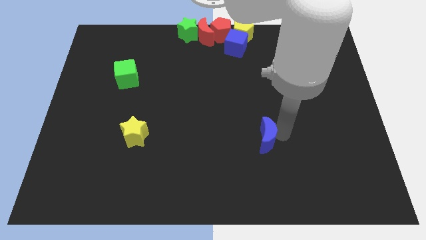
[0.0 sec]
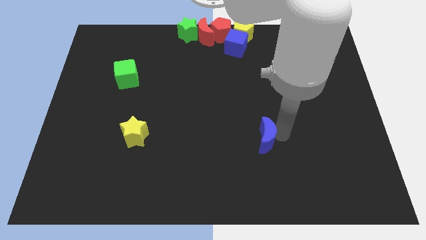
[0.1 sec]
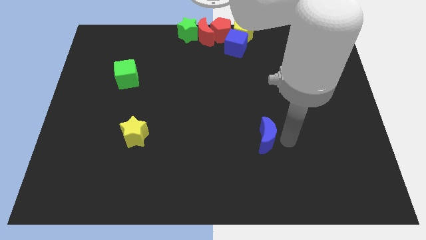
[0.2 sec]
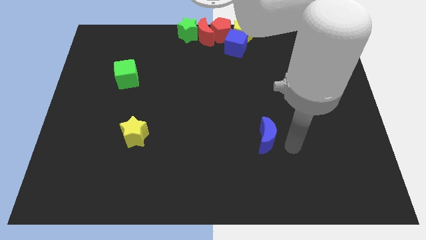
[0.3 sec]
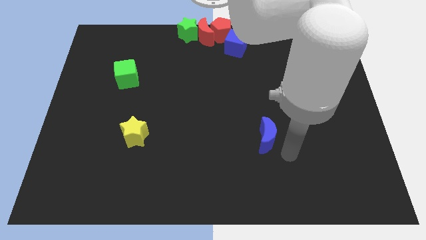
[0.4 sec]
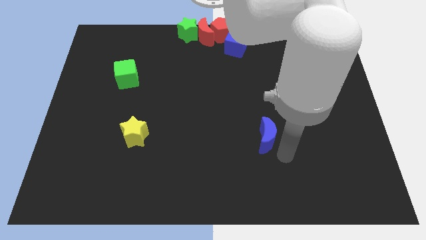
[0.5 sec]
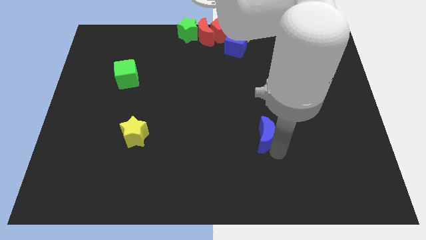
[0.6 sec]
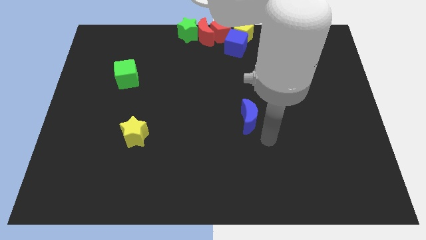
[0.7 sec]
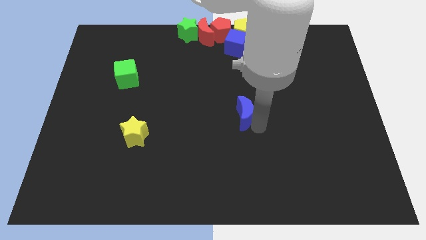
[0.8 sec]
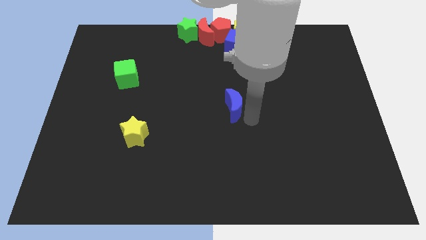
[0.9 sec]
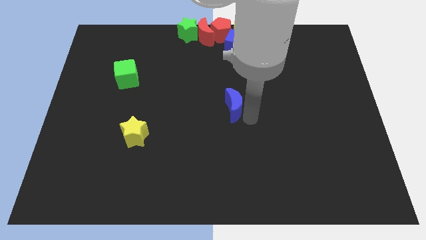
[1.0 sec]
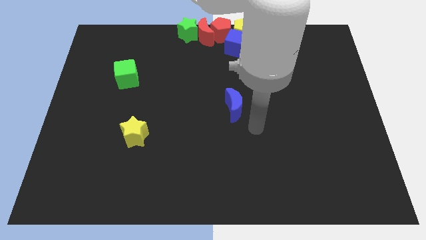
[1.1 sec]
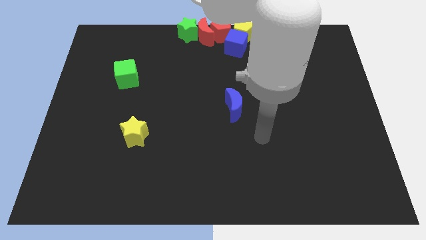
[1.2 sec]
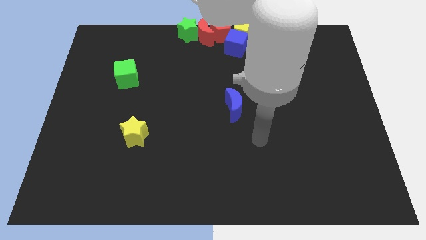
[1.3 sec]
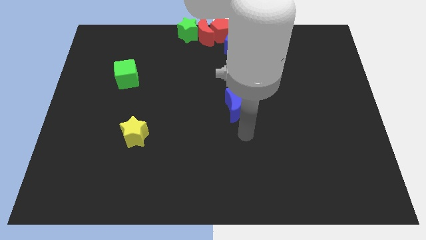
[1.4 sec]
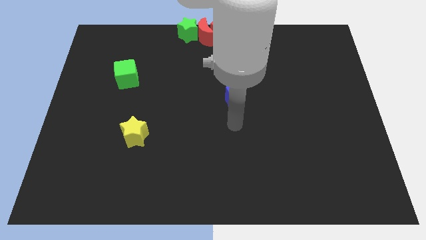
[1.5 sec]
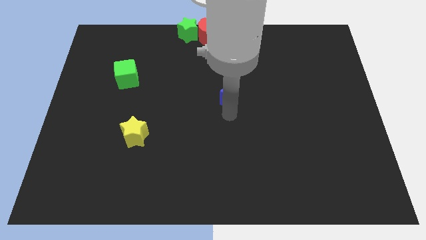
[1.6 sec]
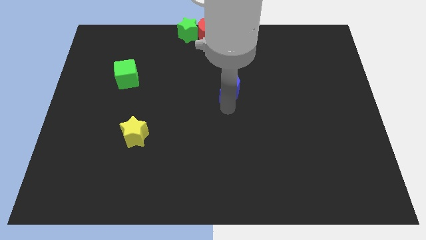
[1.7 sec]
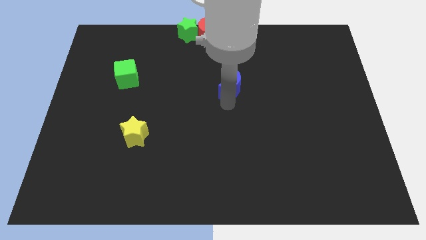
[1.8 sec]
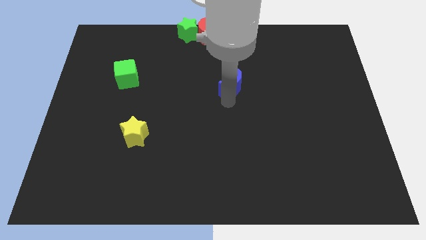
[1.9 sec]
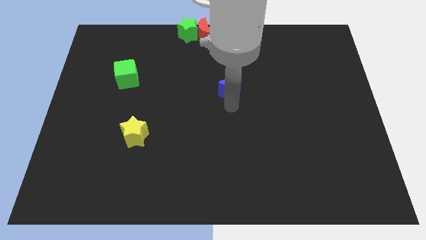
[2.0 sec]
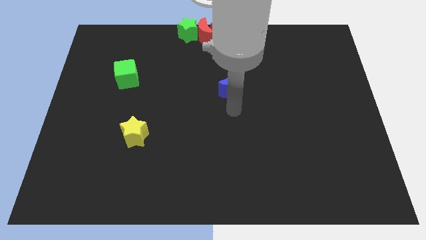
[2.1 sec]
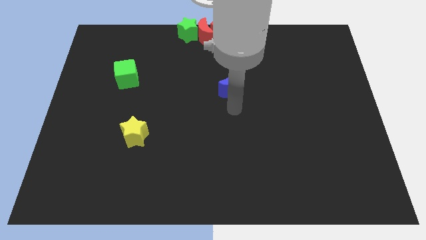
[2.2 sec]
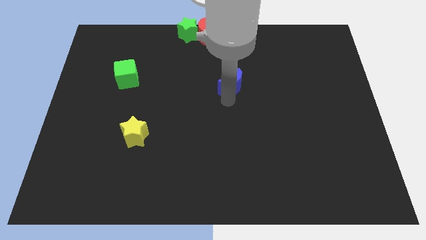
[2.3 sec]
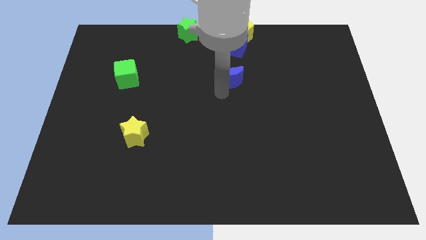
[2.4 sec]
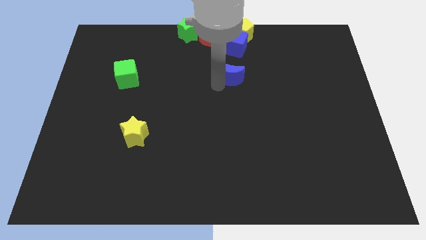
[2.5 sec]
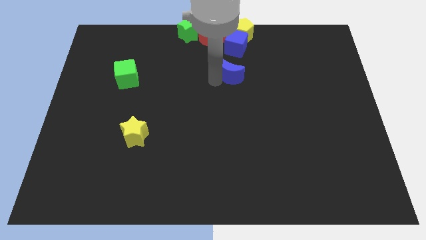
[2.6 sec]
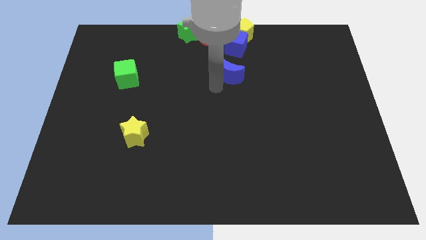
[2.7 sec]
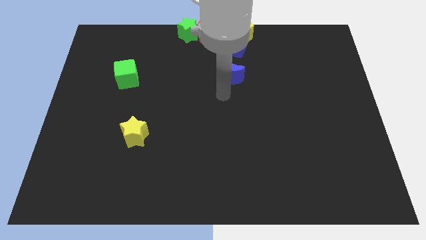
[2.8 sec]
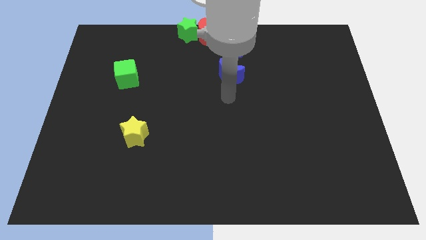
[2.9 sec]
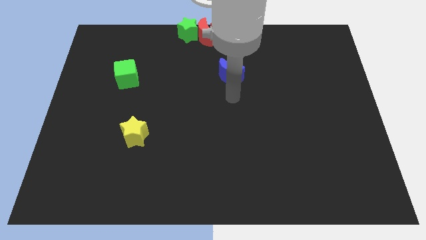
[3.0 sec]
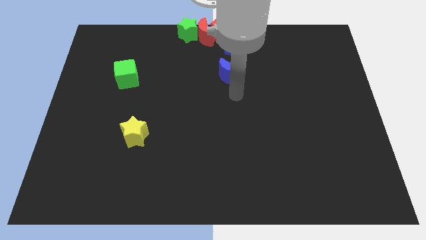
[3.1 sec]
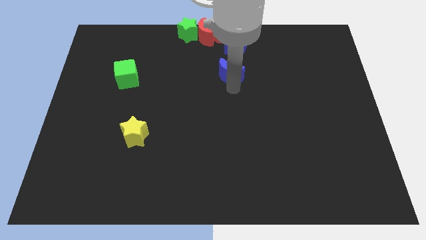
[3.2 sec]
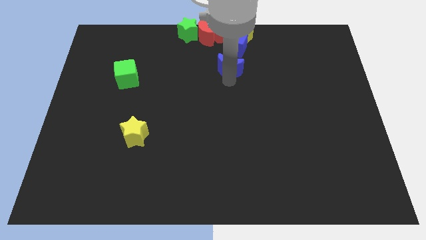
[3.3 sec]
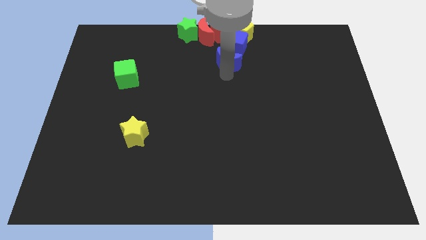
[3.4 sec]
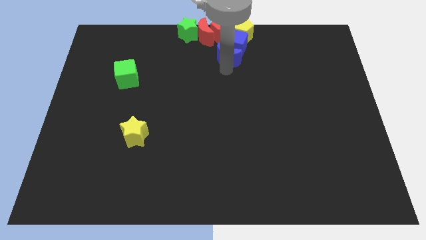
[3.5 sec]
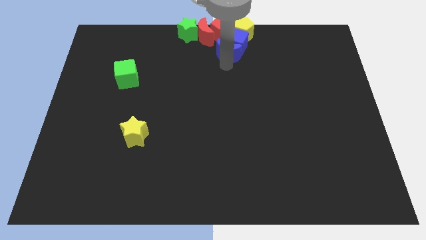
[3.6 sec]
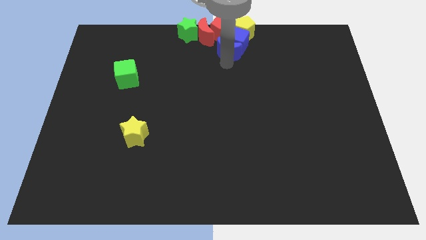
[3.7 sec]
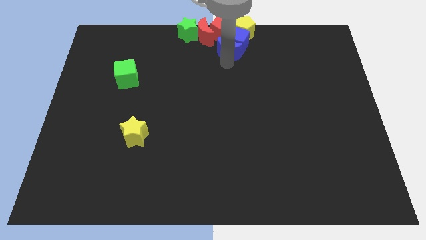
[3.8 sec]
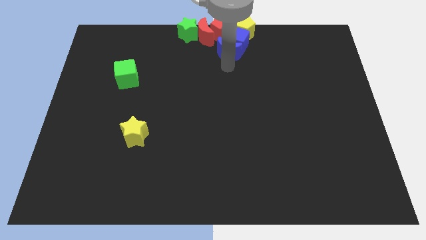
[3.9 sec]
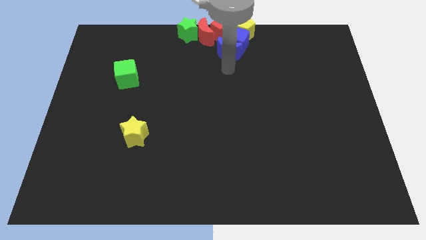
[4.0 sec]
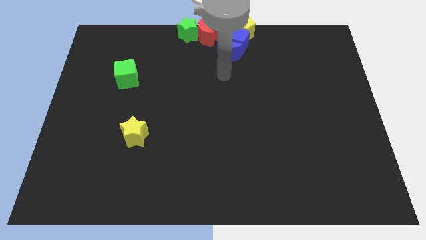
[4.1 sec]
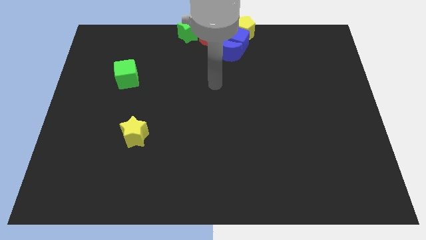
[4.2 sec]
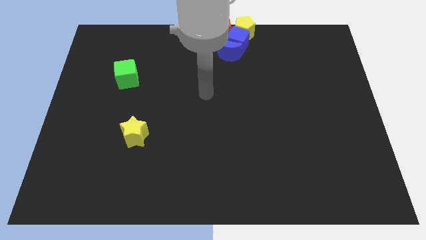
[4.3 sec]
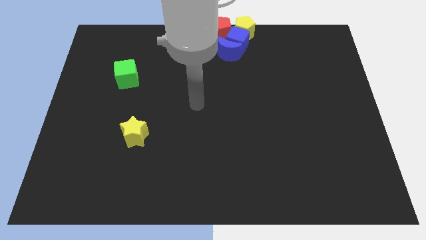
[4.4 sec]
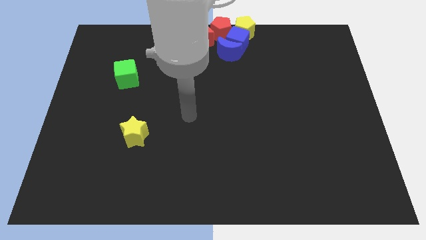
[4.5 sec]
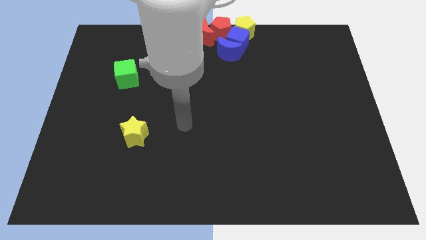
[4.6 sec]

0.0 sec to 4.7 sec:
put the blue moon into the blue cube

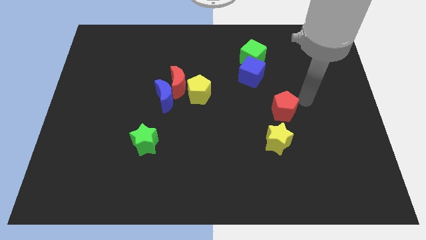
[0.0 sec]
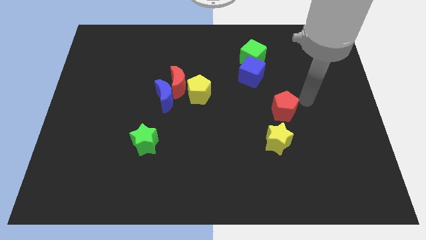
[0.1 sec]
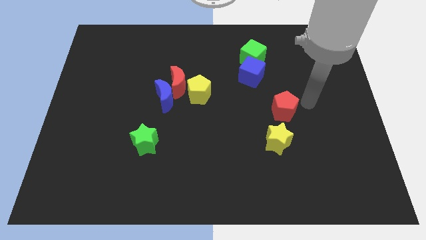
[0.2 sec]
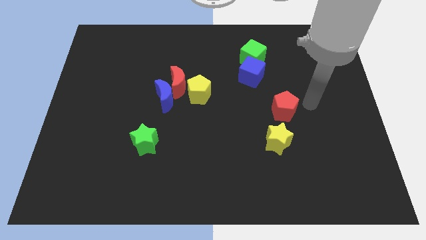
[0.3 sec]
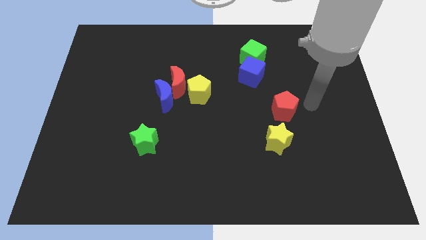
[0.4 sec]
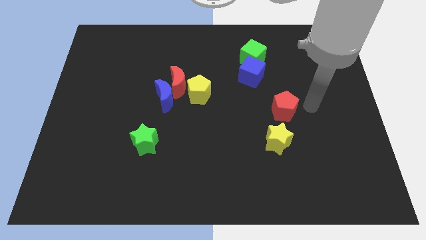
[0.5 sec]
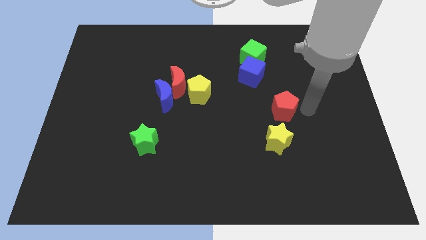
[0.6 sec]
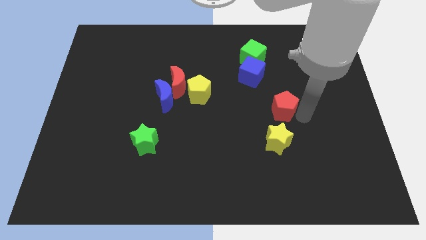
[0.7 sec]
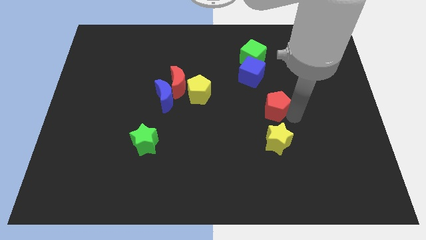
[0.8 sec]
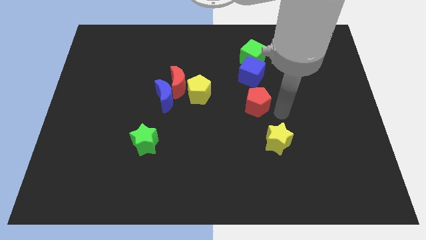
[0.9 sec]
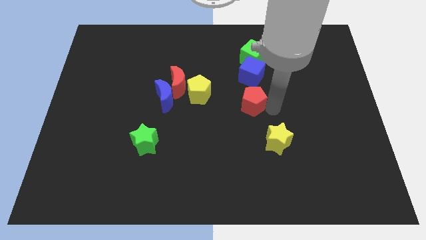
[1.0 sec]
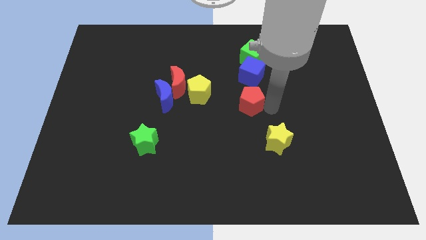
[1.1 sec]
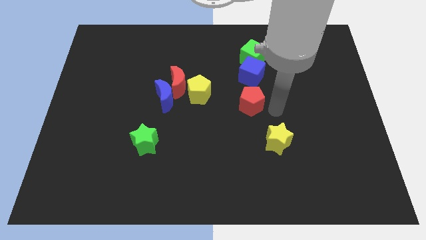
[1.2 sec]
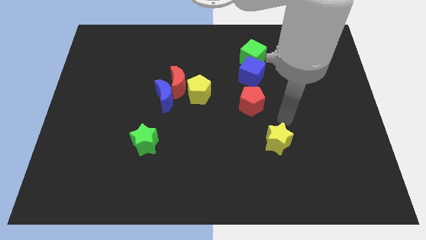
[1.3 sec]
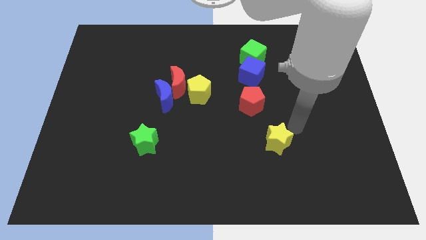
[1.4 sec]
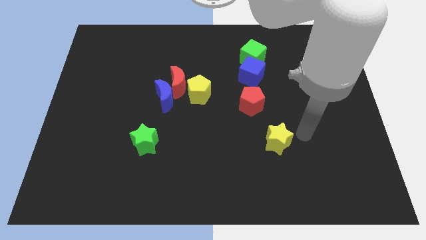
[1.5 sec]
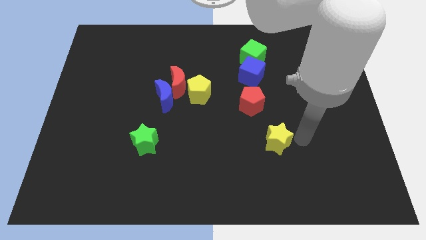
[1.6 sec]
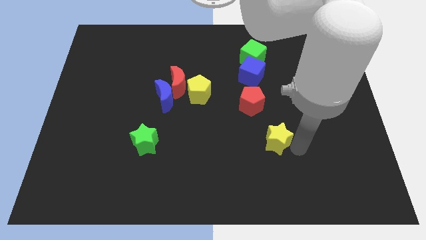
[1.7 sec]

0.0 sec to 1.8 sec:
slide the red pentagon diagonally top left to the yellow star

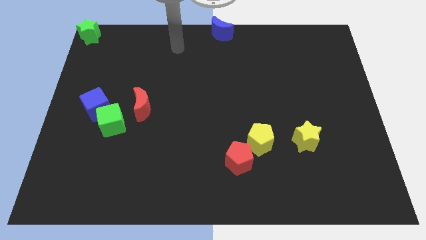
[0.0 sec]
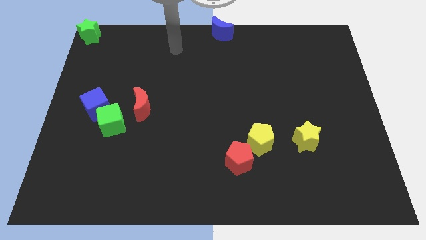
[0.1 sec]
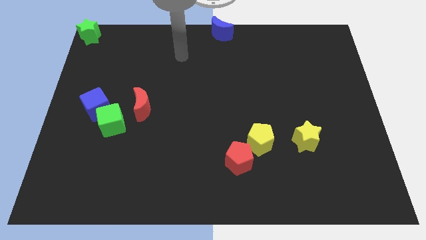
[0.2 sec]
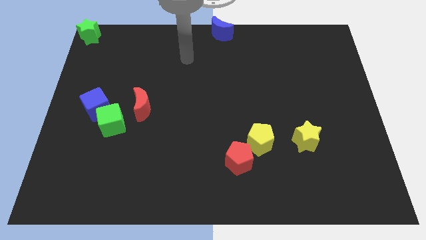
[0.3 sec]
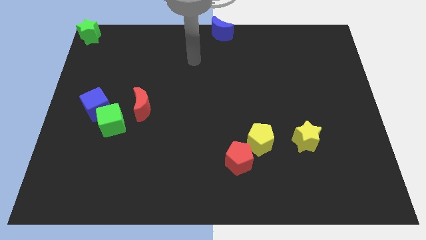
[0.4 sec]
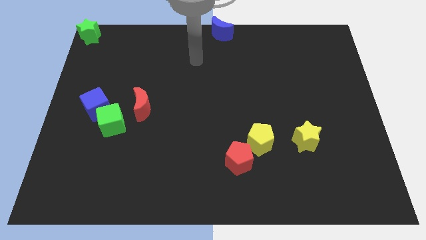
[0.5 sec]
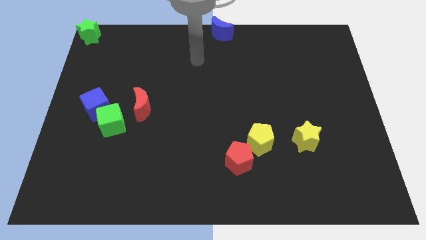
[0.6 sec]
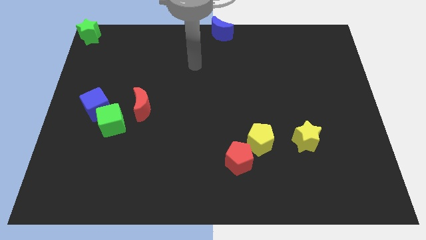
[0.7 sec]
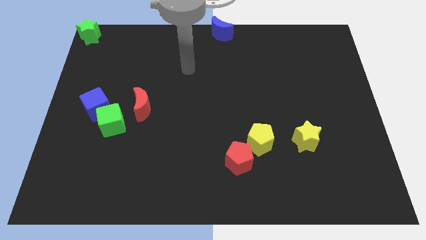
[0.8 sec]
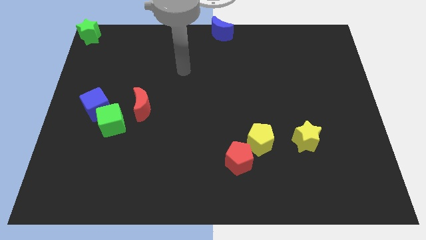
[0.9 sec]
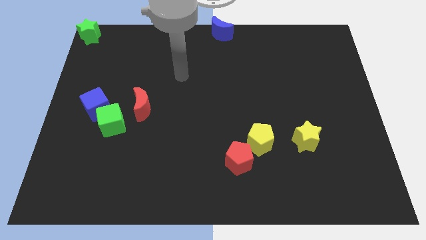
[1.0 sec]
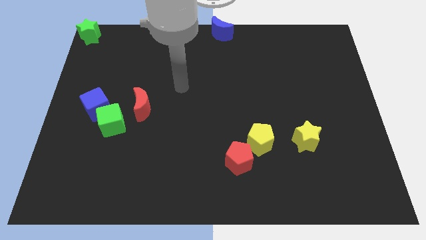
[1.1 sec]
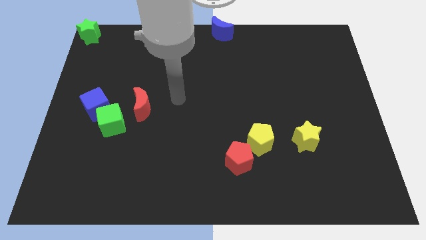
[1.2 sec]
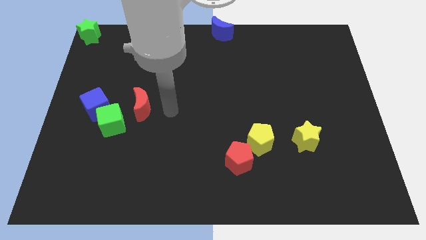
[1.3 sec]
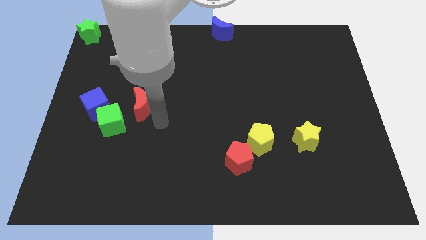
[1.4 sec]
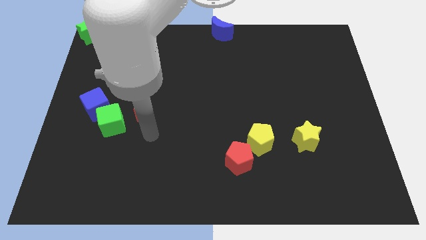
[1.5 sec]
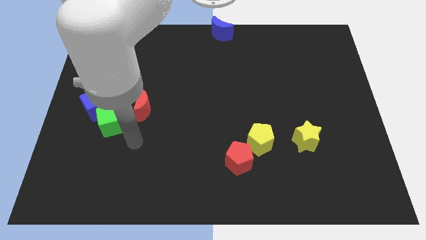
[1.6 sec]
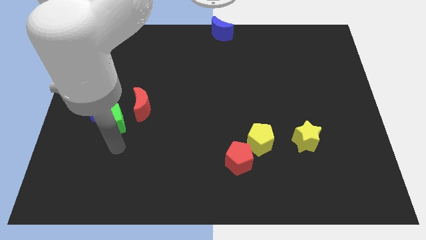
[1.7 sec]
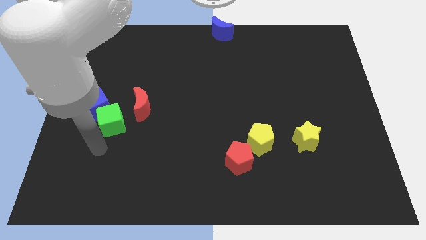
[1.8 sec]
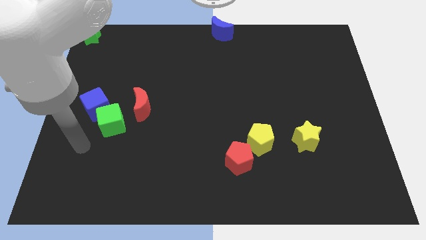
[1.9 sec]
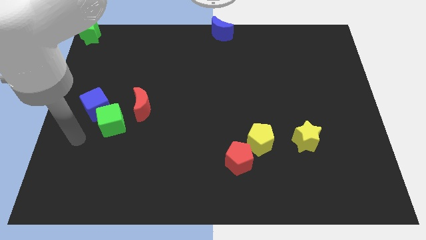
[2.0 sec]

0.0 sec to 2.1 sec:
slide your arm to the left of green cube

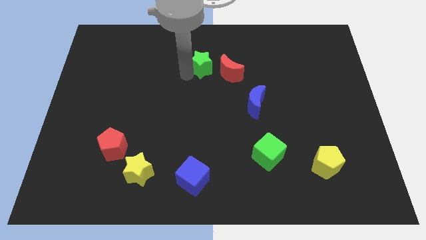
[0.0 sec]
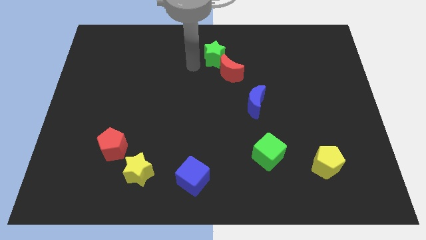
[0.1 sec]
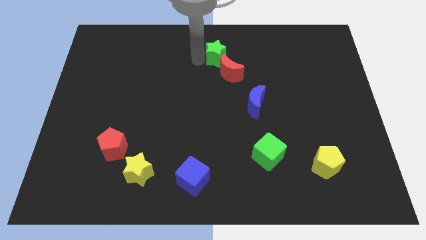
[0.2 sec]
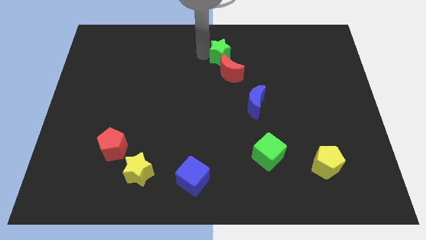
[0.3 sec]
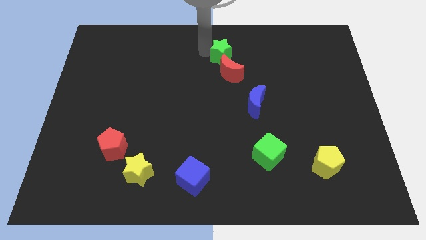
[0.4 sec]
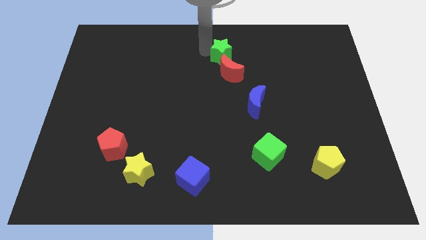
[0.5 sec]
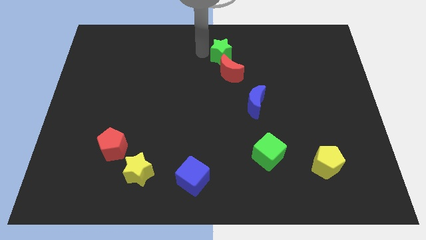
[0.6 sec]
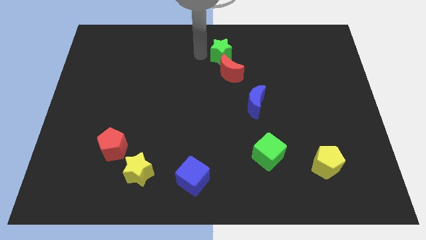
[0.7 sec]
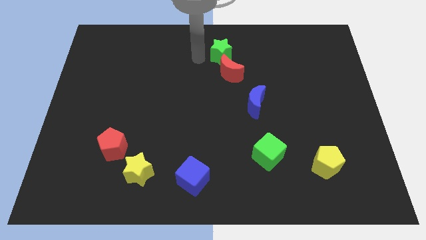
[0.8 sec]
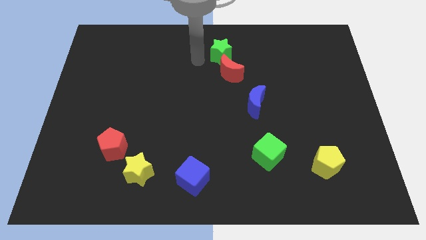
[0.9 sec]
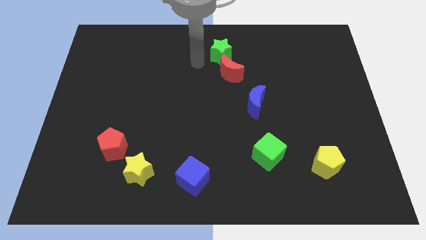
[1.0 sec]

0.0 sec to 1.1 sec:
push green star into red moon
